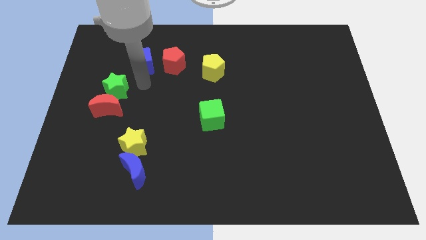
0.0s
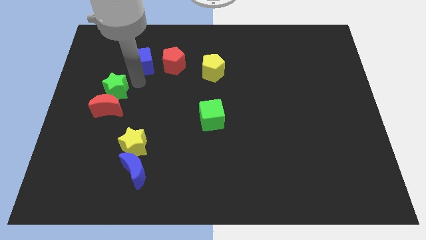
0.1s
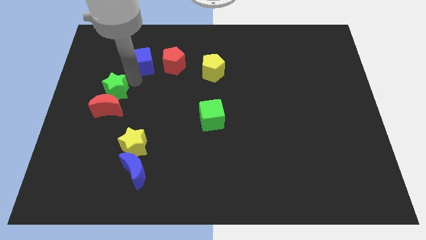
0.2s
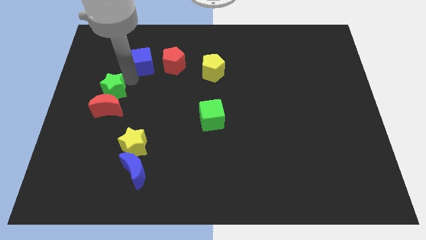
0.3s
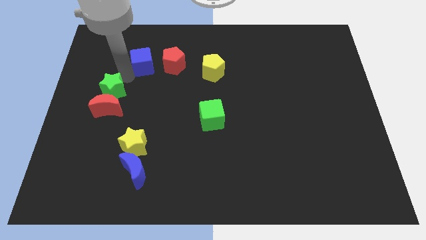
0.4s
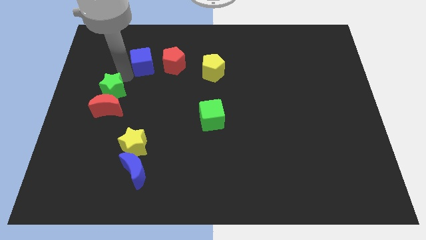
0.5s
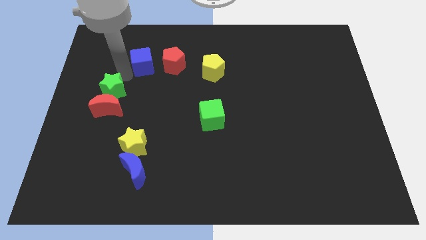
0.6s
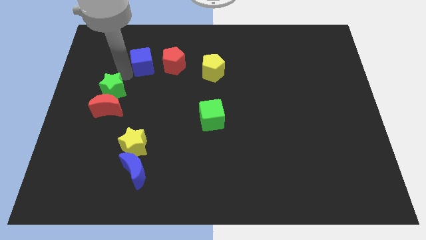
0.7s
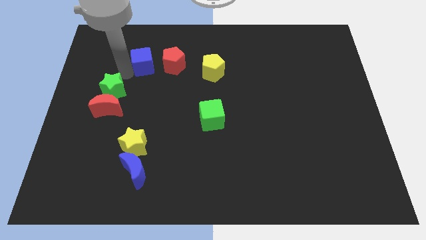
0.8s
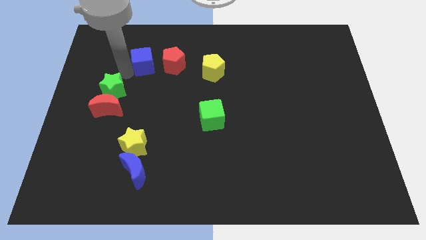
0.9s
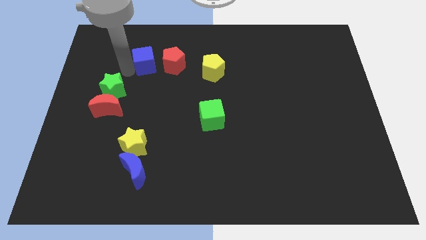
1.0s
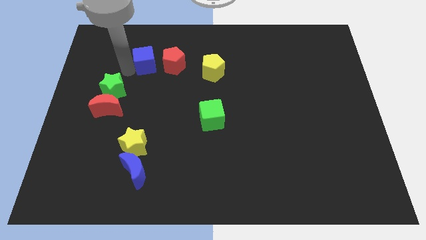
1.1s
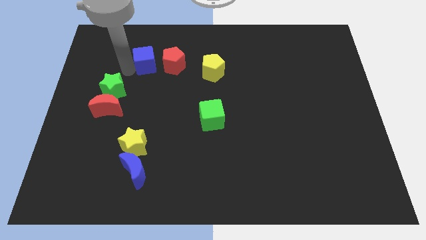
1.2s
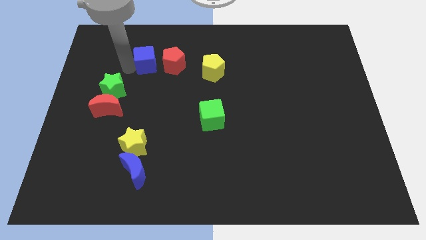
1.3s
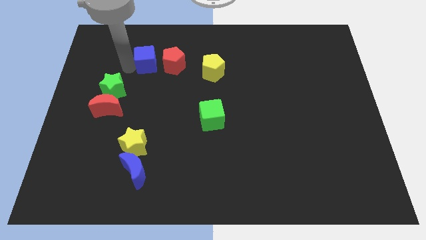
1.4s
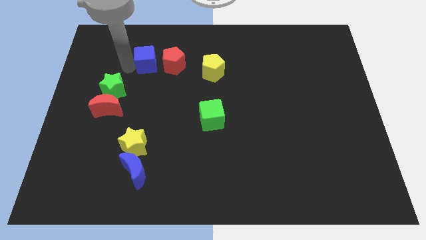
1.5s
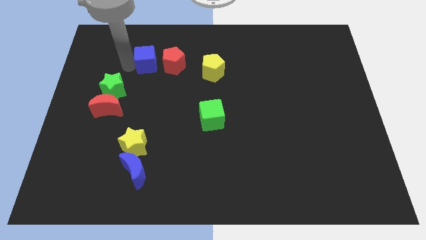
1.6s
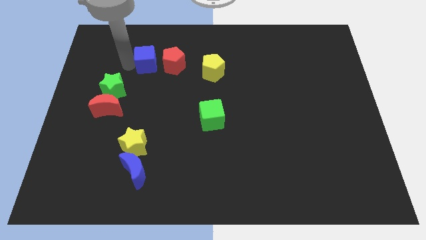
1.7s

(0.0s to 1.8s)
slightly move the blue cube to the right

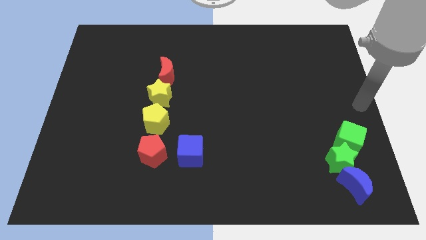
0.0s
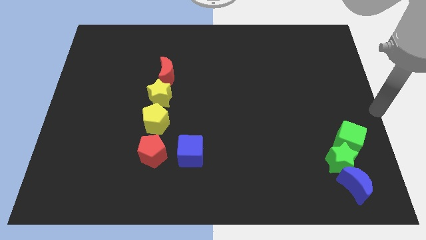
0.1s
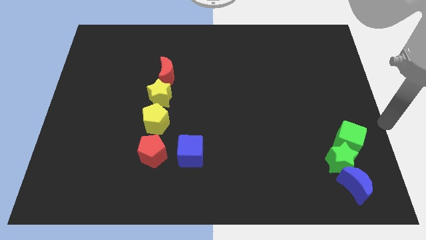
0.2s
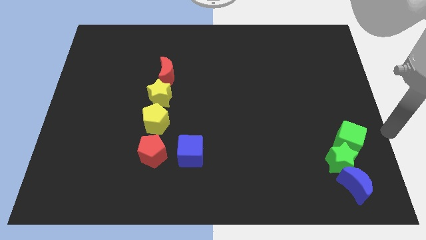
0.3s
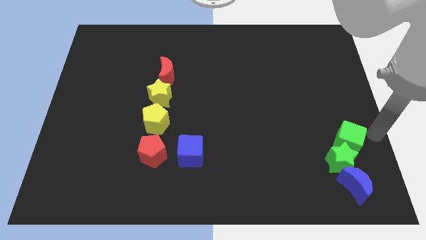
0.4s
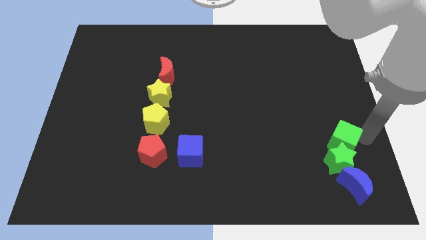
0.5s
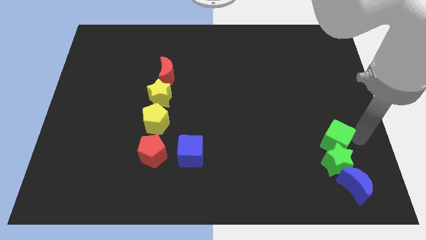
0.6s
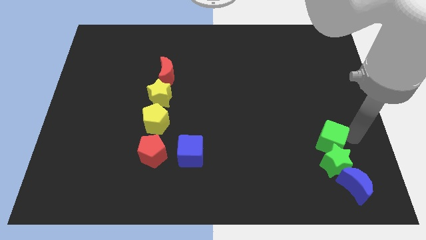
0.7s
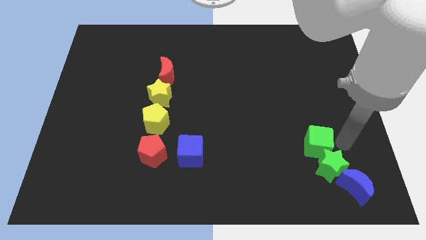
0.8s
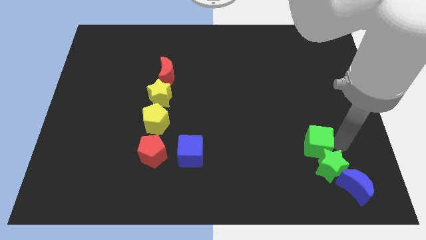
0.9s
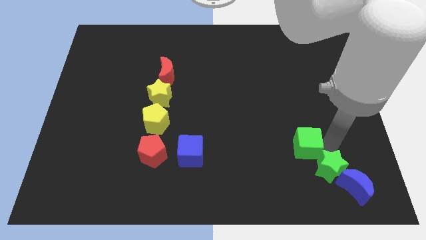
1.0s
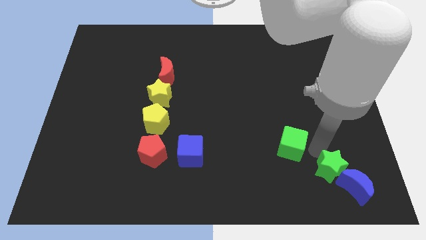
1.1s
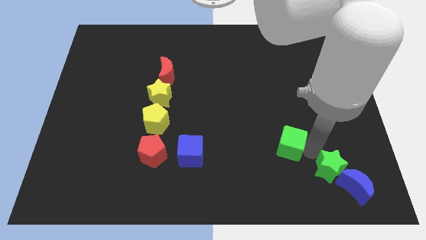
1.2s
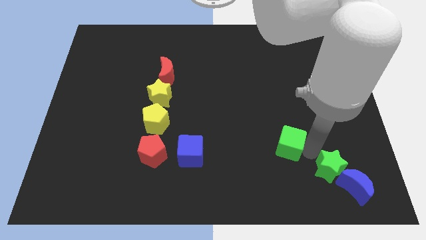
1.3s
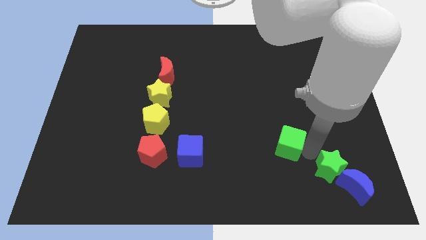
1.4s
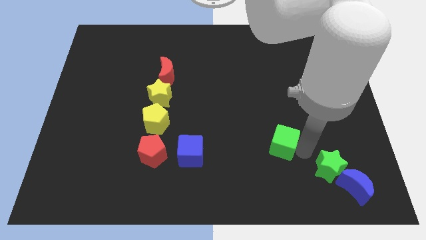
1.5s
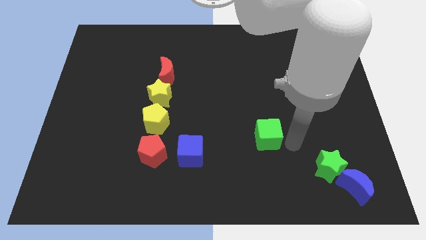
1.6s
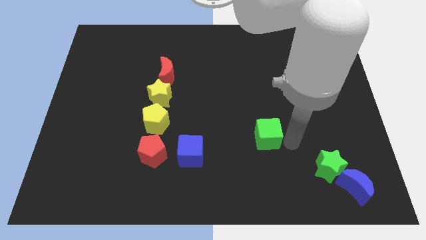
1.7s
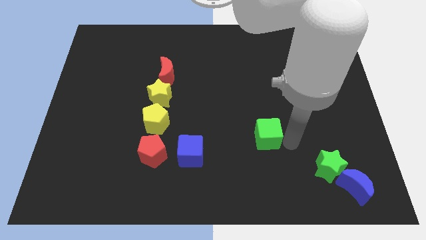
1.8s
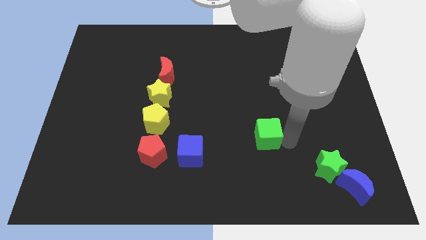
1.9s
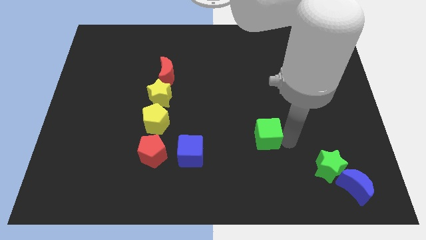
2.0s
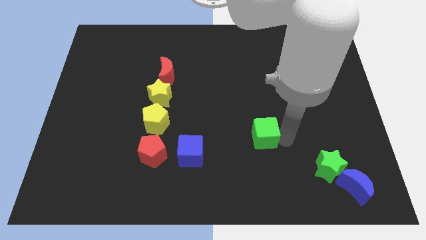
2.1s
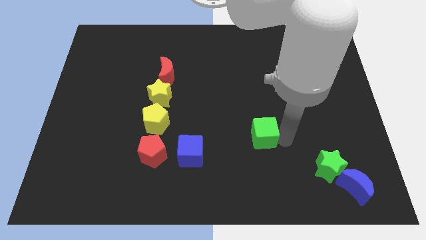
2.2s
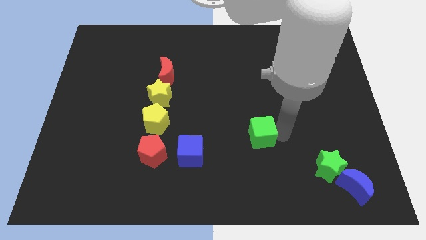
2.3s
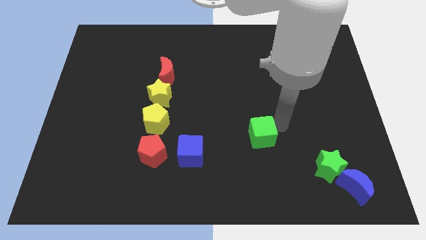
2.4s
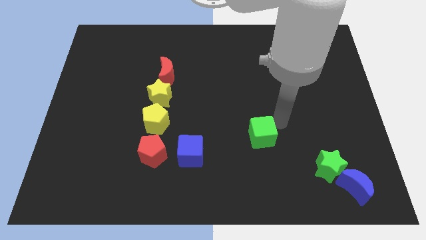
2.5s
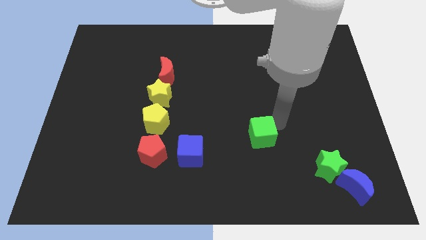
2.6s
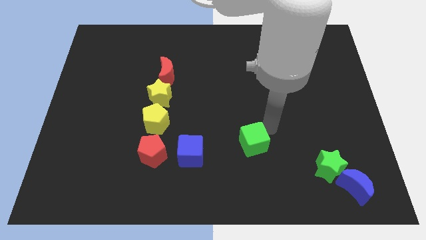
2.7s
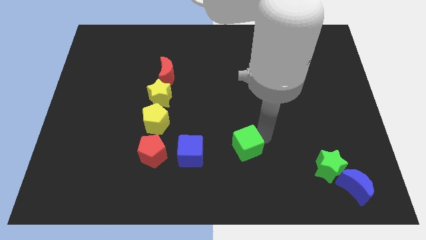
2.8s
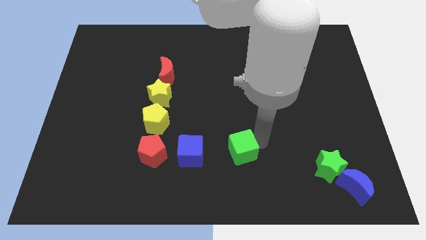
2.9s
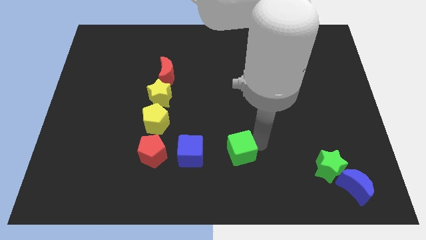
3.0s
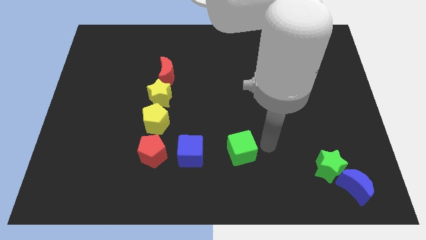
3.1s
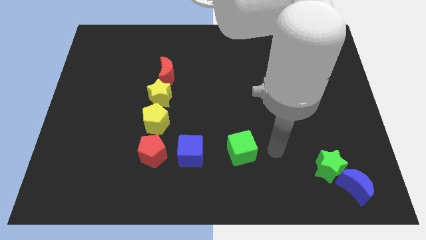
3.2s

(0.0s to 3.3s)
move green cube right to the blue cube

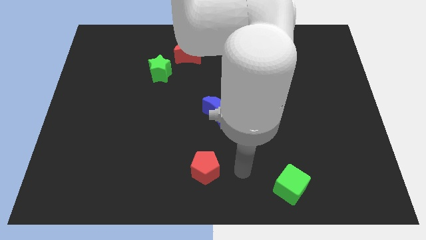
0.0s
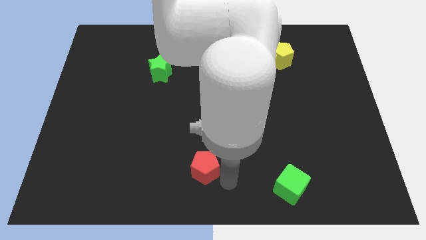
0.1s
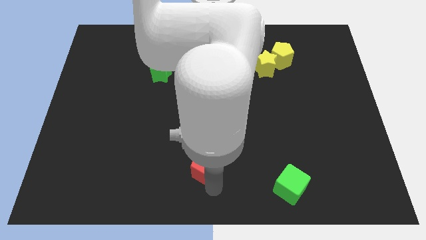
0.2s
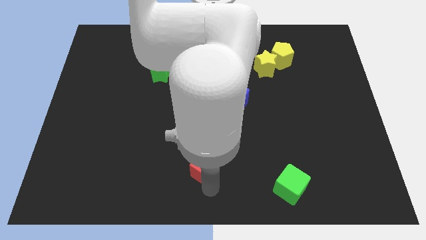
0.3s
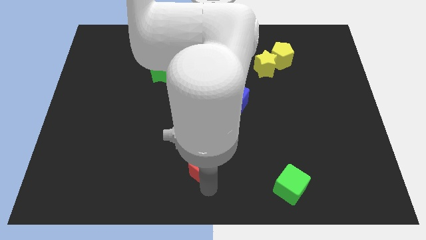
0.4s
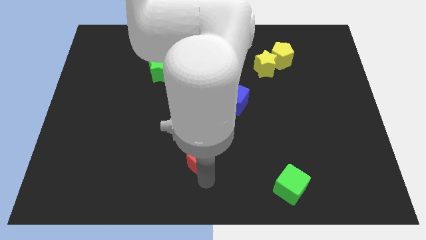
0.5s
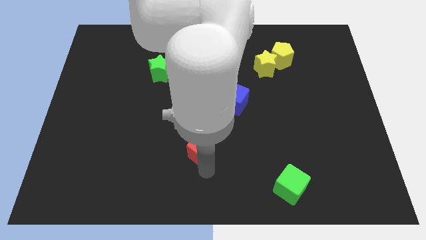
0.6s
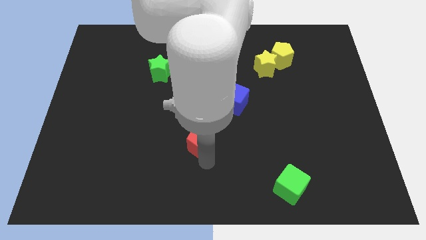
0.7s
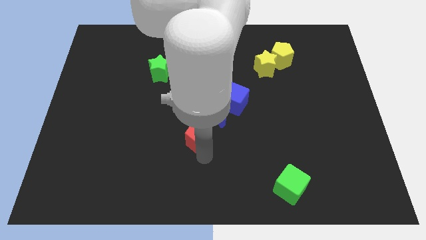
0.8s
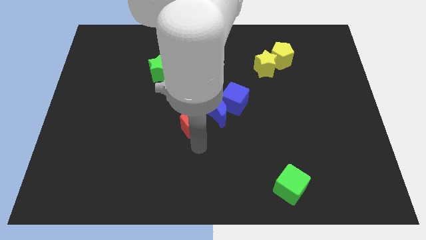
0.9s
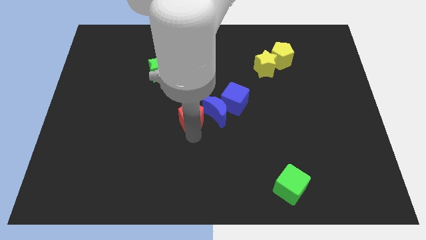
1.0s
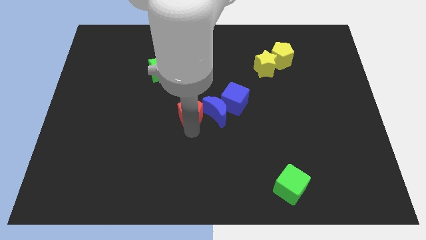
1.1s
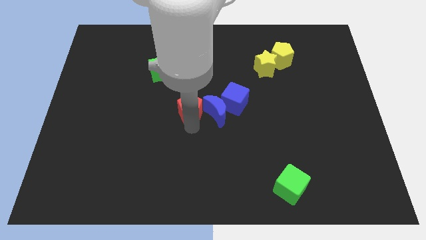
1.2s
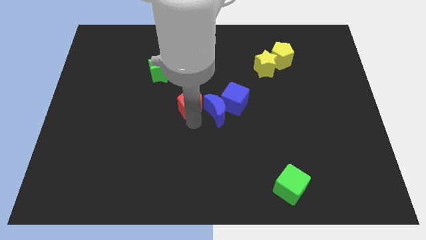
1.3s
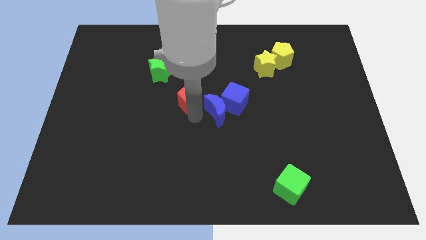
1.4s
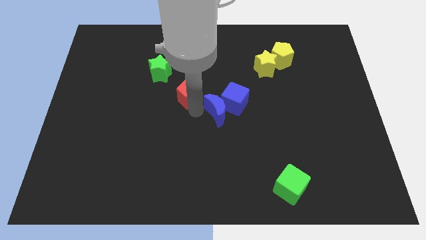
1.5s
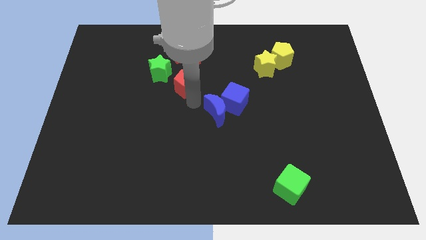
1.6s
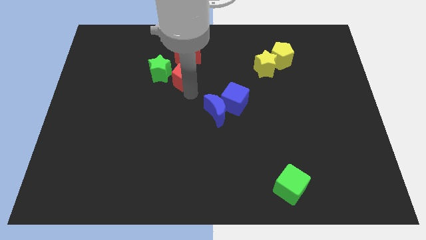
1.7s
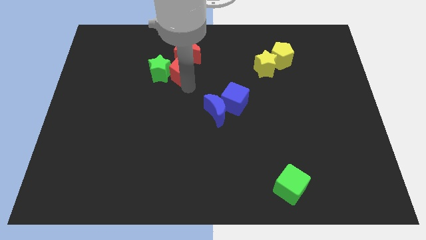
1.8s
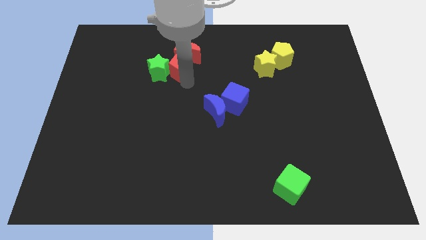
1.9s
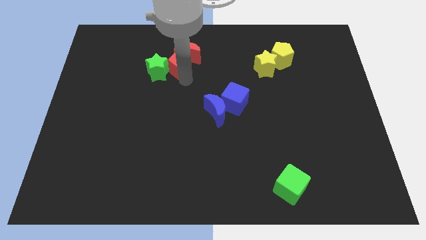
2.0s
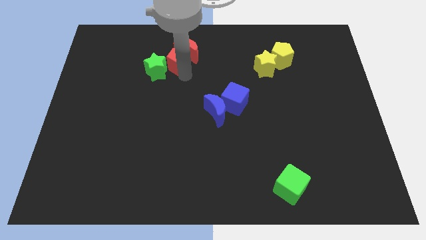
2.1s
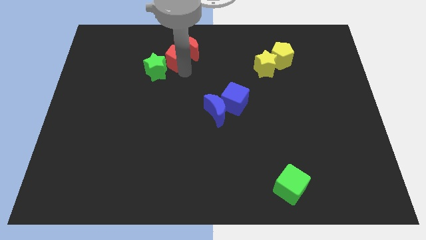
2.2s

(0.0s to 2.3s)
place red pentagon between red moon and green star

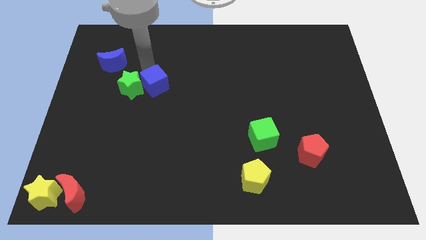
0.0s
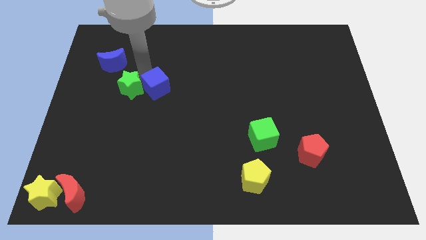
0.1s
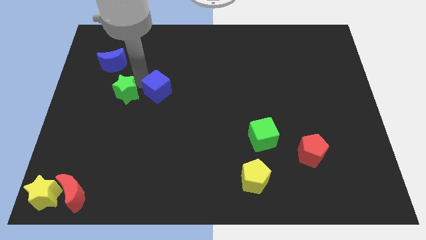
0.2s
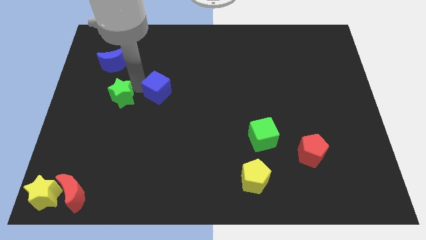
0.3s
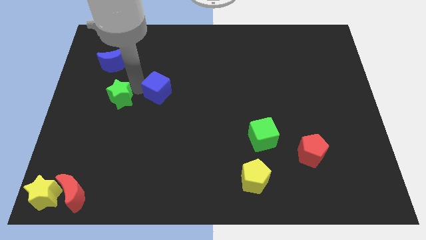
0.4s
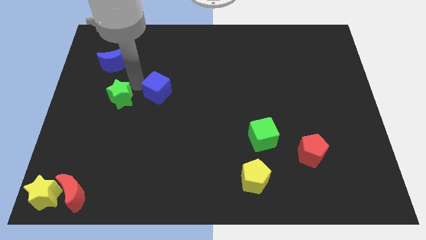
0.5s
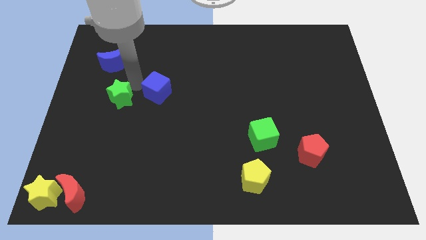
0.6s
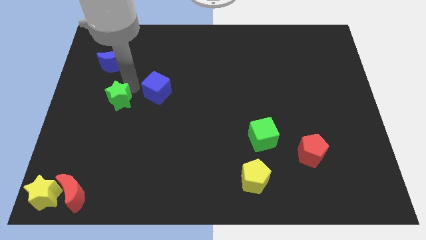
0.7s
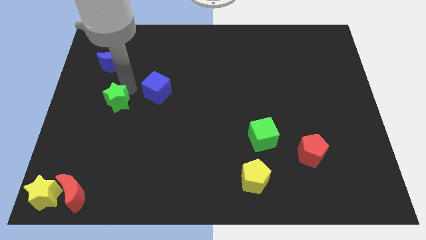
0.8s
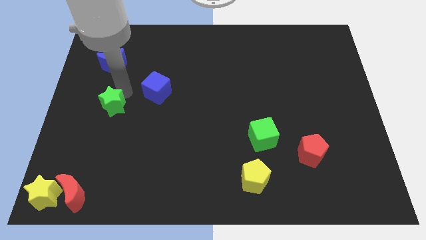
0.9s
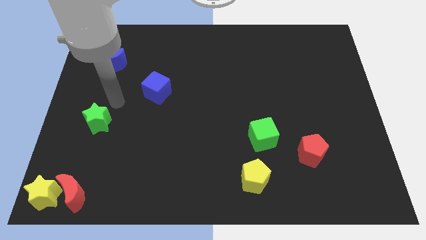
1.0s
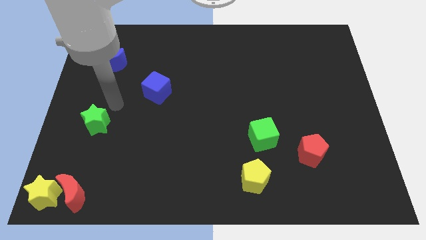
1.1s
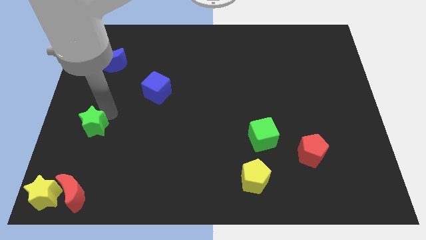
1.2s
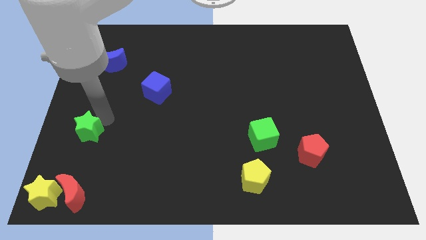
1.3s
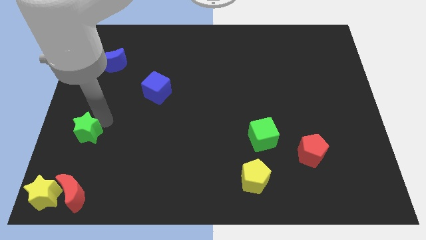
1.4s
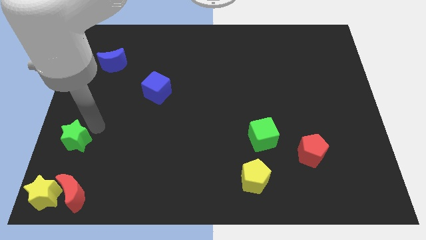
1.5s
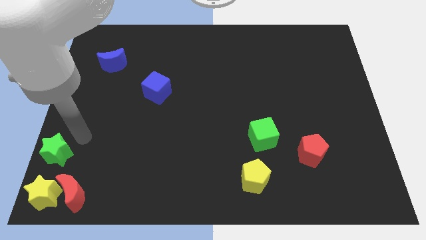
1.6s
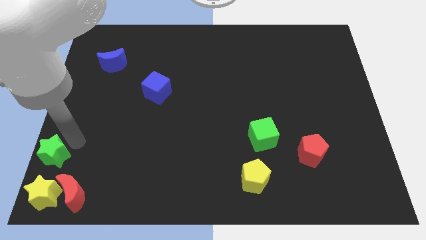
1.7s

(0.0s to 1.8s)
place the green star above the yellow star
